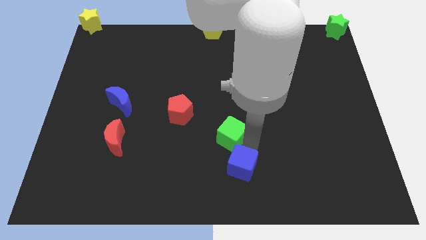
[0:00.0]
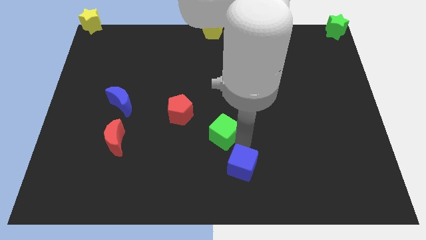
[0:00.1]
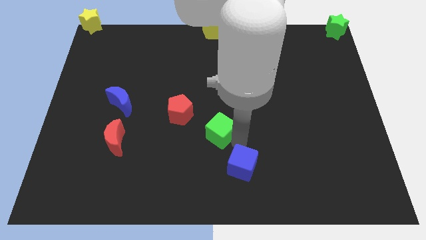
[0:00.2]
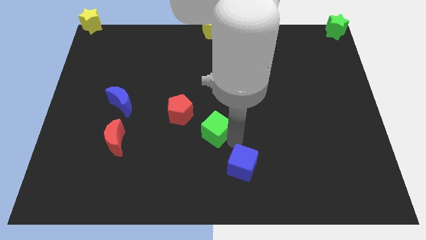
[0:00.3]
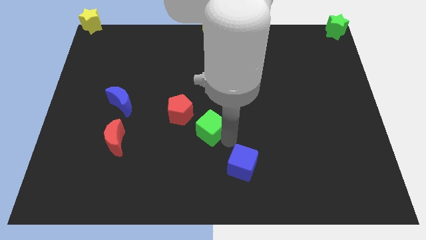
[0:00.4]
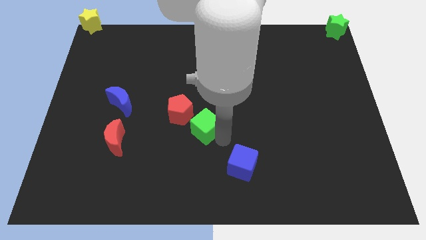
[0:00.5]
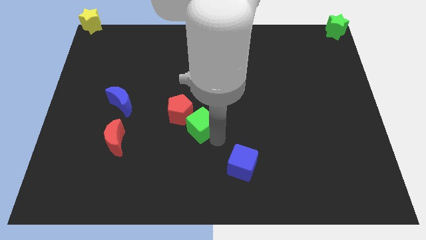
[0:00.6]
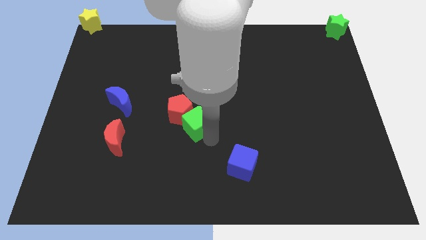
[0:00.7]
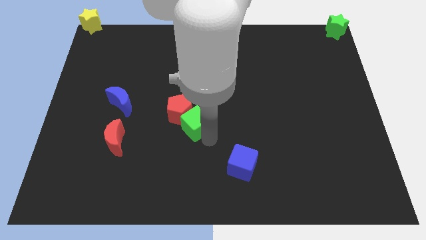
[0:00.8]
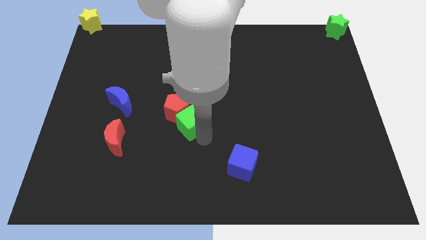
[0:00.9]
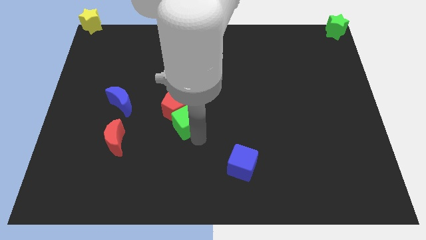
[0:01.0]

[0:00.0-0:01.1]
separate green cube from blue cube

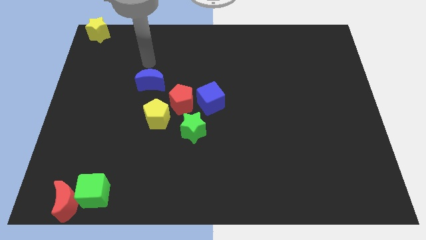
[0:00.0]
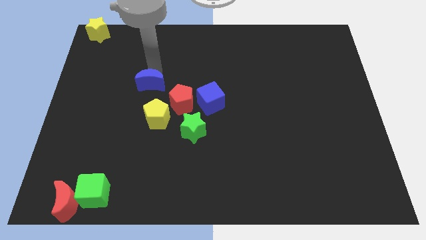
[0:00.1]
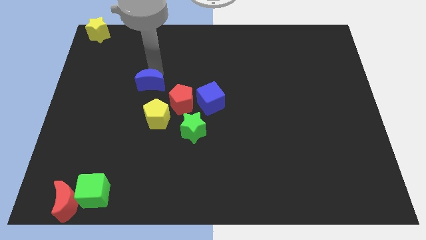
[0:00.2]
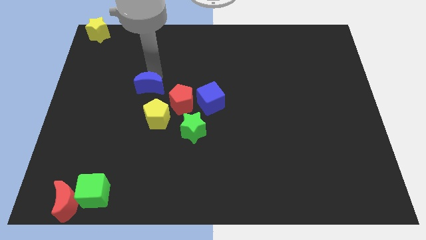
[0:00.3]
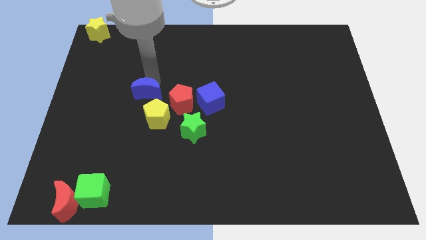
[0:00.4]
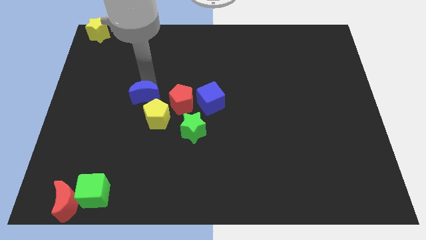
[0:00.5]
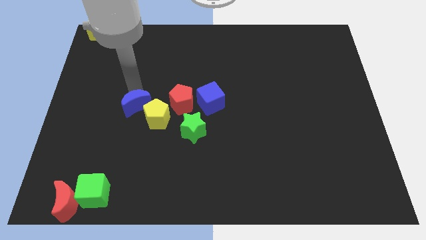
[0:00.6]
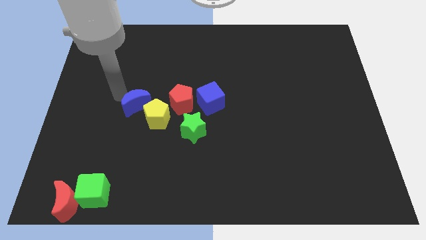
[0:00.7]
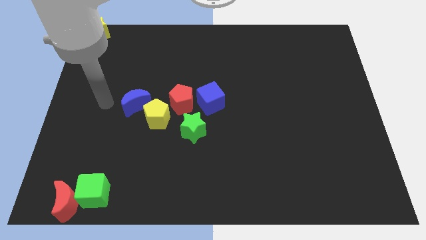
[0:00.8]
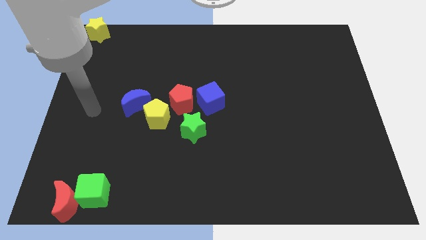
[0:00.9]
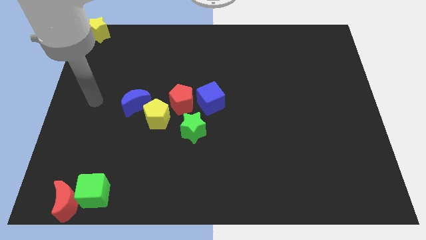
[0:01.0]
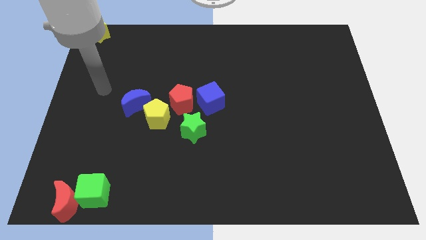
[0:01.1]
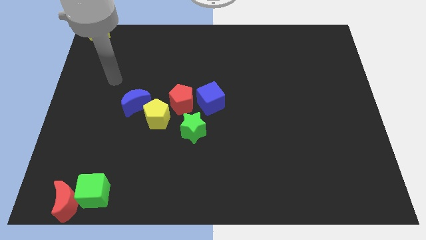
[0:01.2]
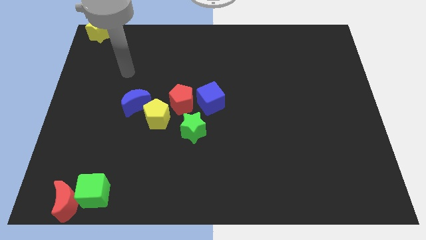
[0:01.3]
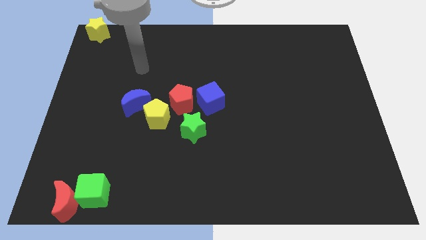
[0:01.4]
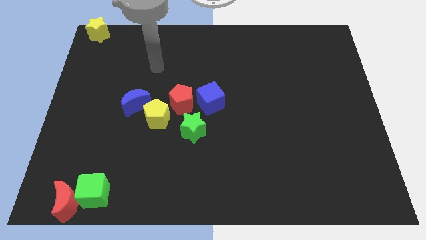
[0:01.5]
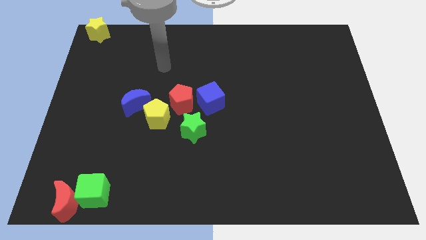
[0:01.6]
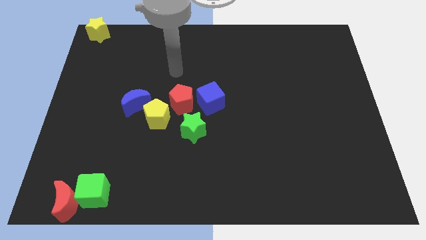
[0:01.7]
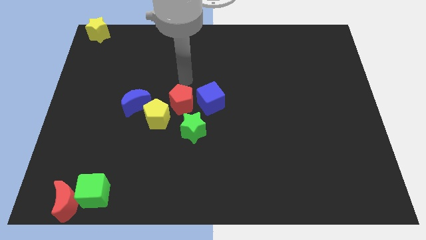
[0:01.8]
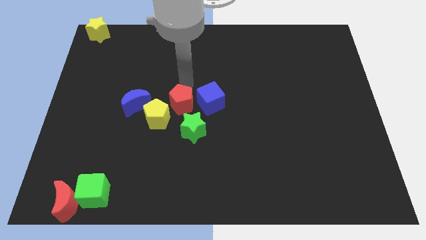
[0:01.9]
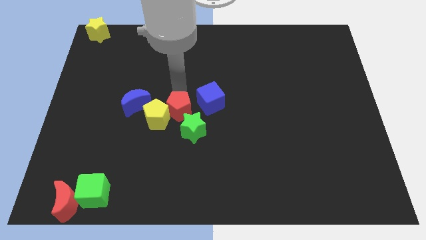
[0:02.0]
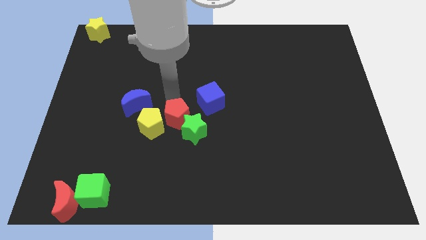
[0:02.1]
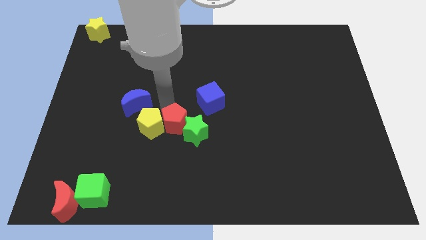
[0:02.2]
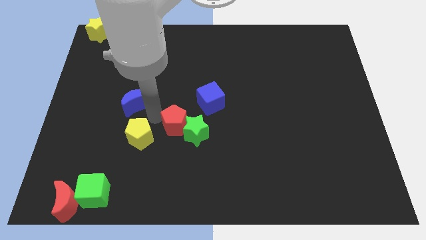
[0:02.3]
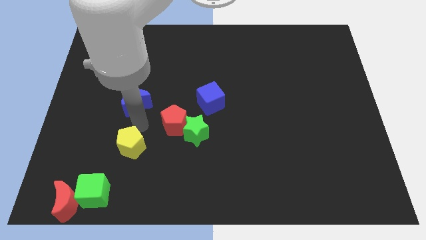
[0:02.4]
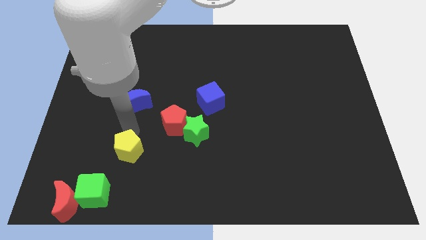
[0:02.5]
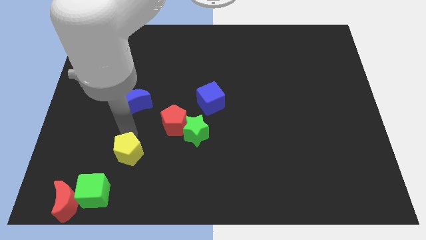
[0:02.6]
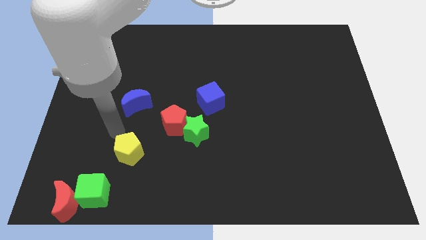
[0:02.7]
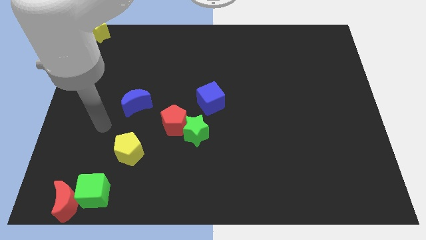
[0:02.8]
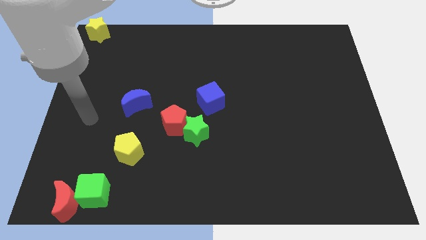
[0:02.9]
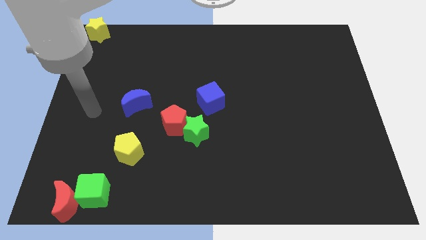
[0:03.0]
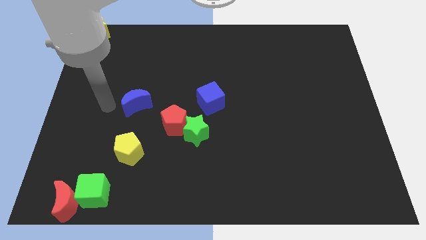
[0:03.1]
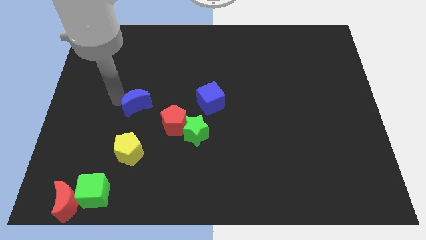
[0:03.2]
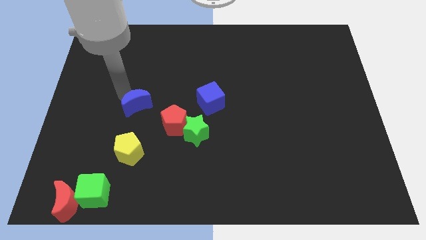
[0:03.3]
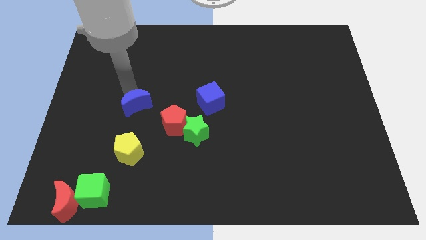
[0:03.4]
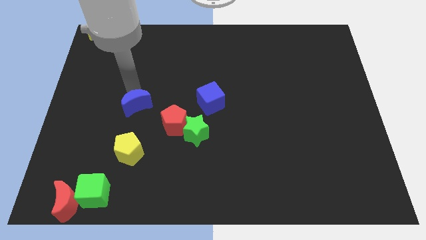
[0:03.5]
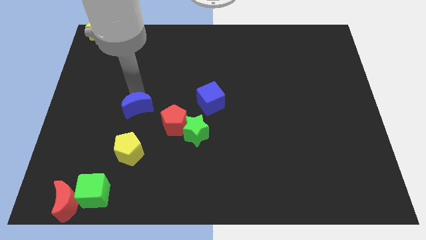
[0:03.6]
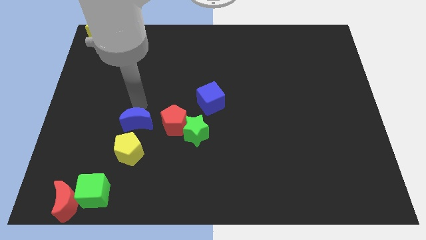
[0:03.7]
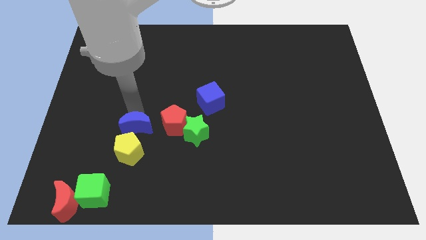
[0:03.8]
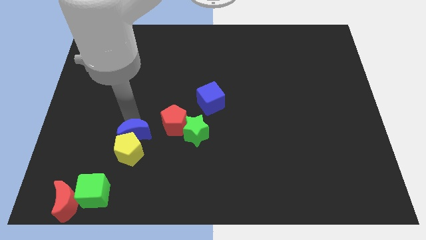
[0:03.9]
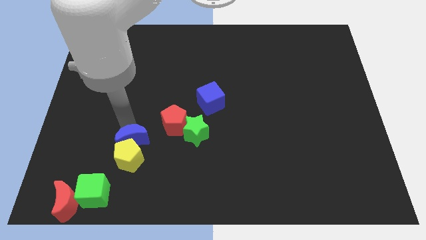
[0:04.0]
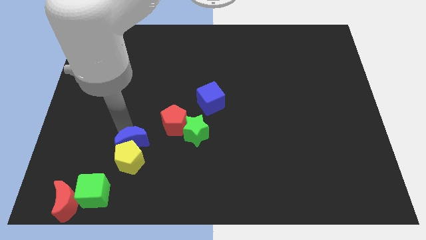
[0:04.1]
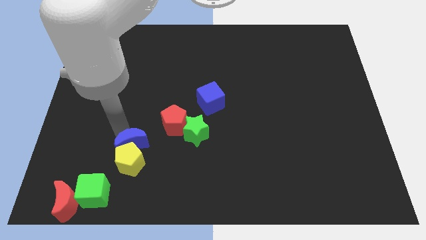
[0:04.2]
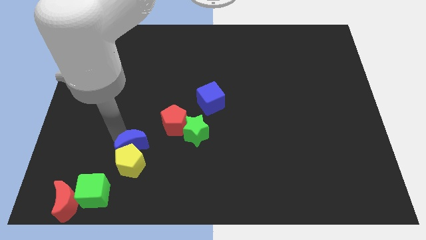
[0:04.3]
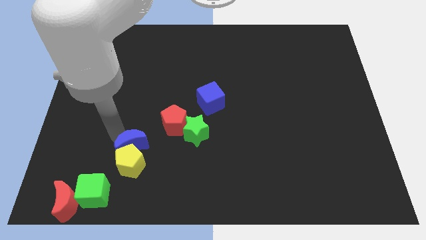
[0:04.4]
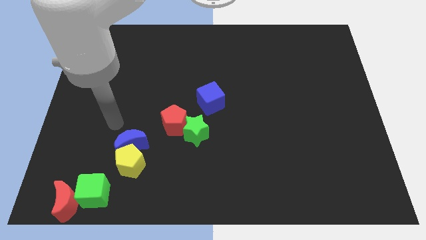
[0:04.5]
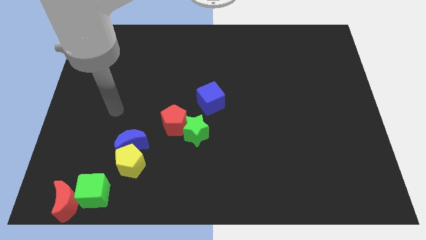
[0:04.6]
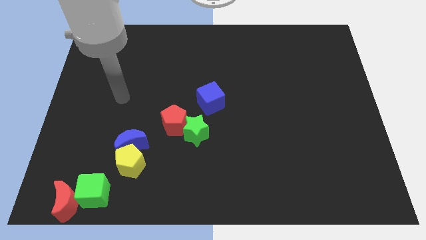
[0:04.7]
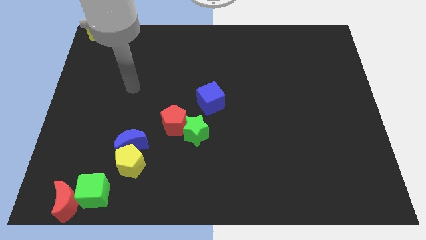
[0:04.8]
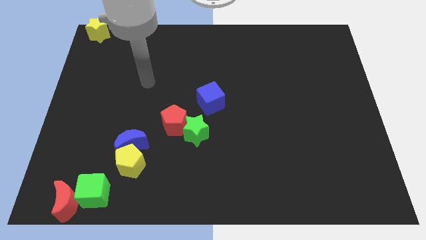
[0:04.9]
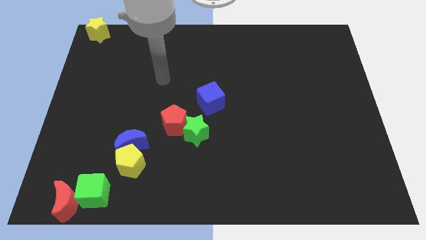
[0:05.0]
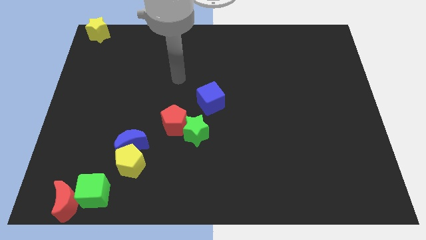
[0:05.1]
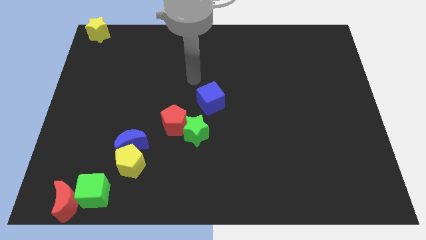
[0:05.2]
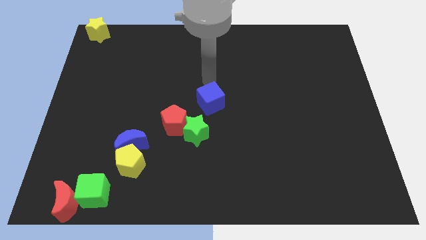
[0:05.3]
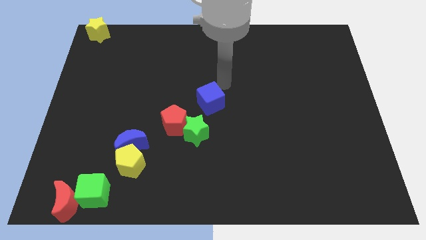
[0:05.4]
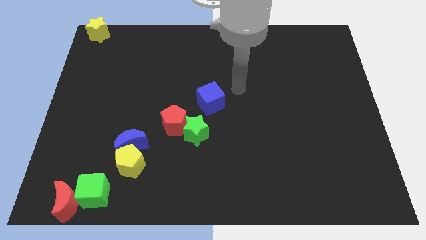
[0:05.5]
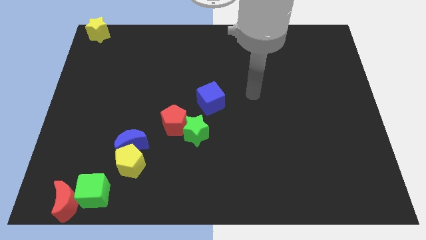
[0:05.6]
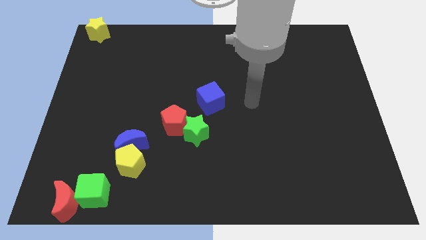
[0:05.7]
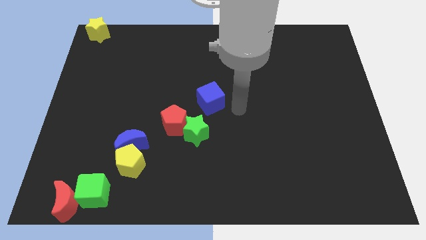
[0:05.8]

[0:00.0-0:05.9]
push blue moon into the yellow pentagon

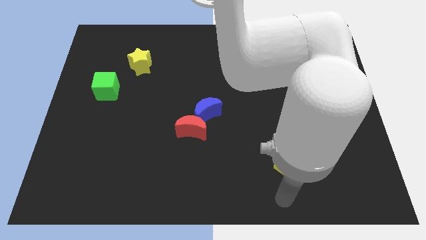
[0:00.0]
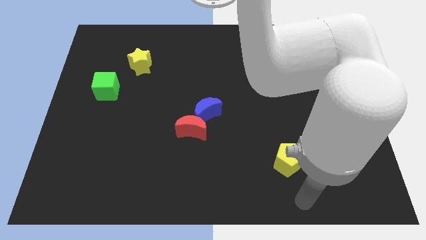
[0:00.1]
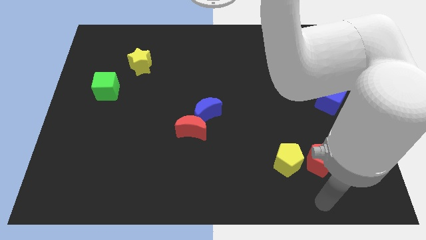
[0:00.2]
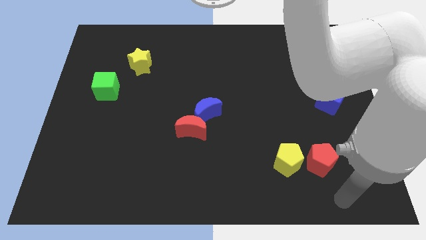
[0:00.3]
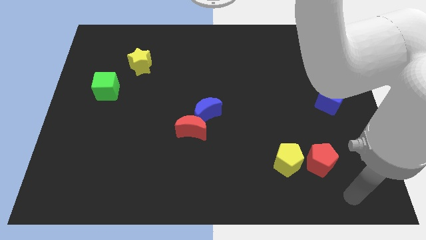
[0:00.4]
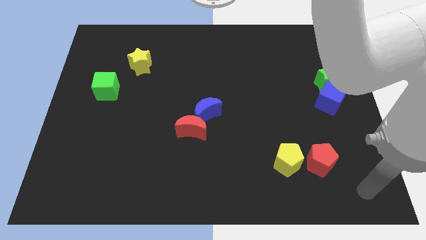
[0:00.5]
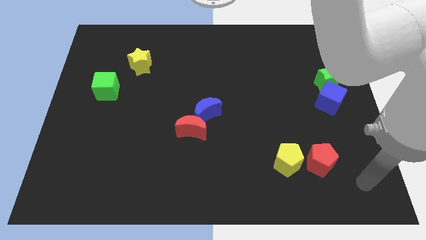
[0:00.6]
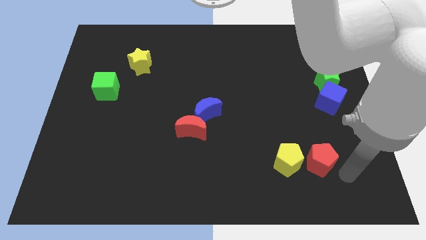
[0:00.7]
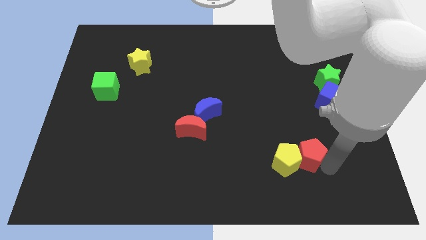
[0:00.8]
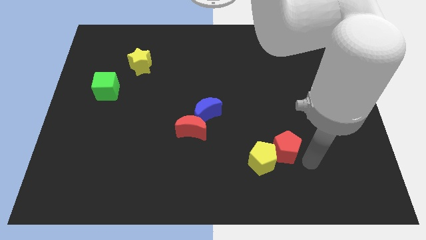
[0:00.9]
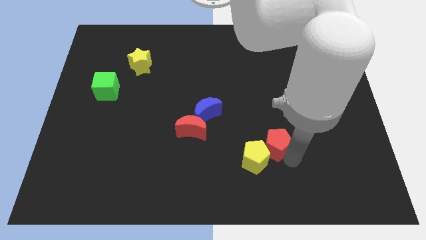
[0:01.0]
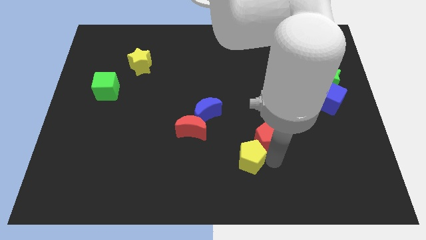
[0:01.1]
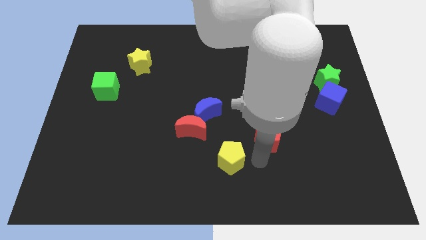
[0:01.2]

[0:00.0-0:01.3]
push the red pentagon into the yellow pentagon

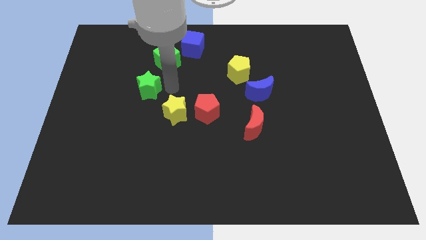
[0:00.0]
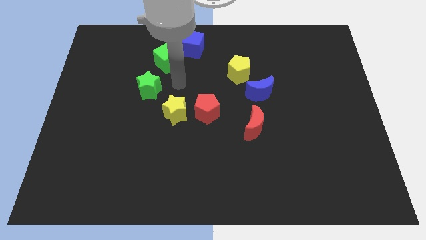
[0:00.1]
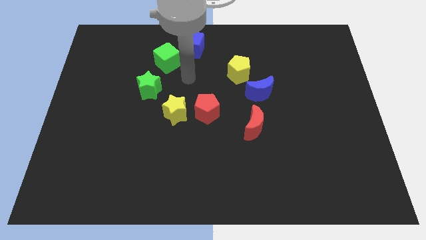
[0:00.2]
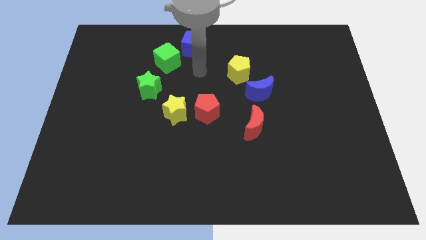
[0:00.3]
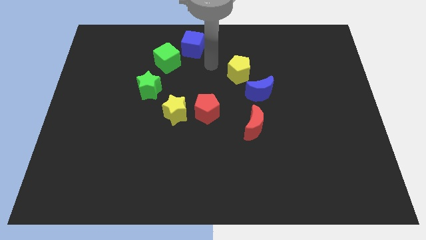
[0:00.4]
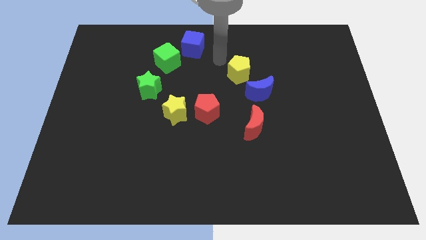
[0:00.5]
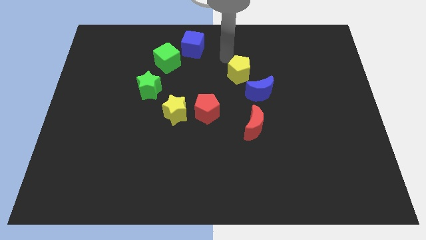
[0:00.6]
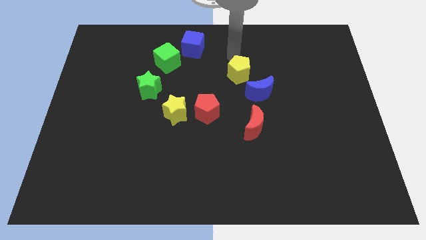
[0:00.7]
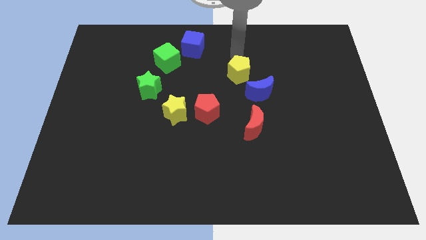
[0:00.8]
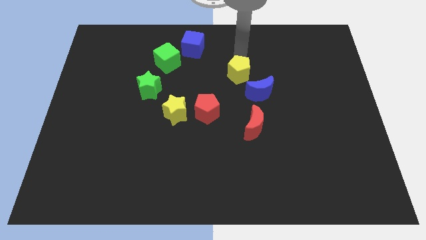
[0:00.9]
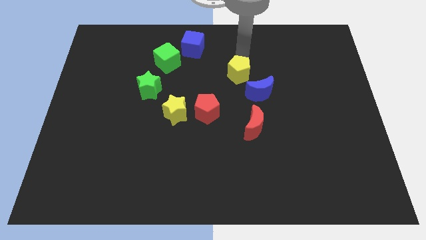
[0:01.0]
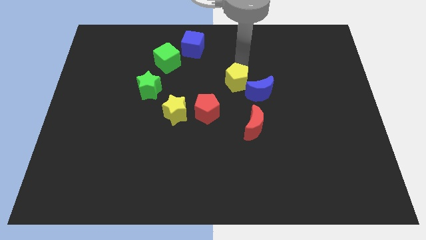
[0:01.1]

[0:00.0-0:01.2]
place the arm above the yellow pentagon
